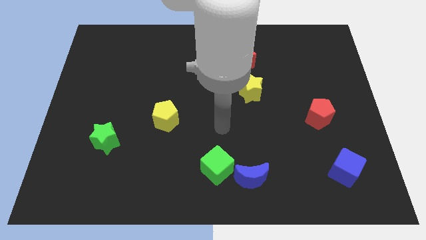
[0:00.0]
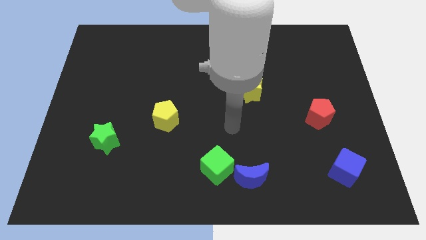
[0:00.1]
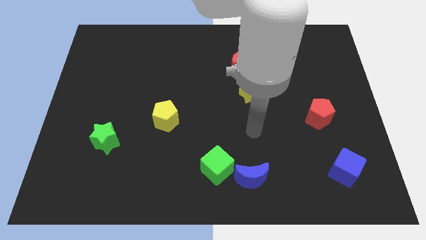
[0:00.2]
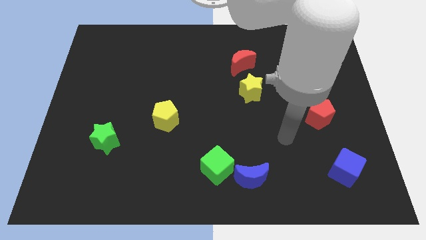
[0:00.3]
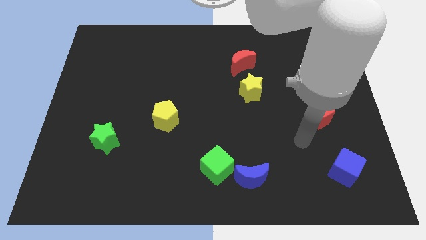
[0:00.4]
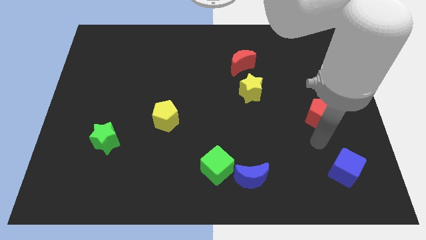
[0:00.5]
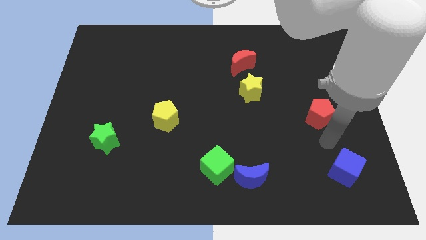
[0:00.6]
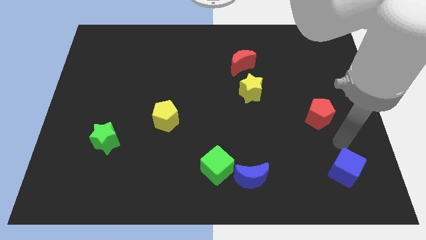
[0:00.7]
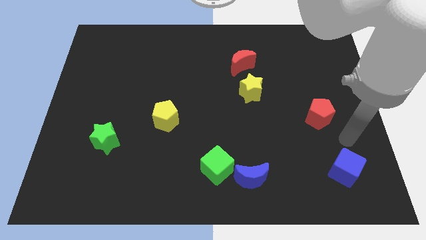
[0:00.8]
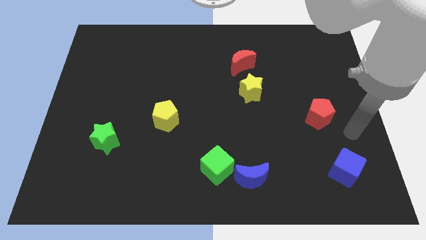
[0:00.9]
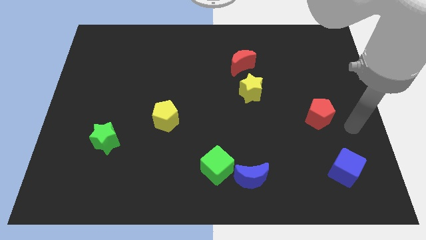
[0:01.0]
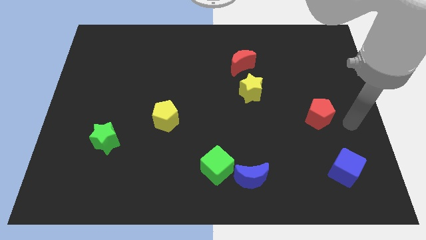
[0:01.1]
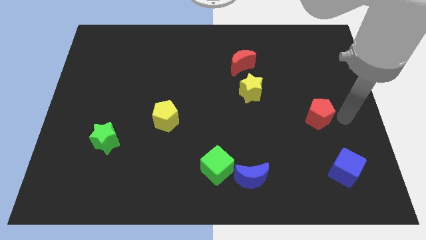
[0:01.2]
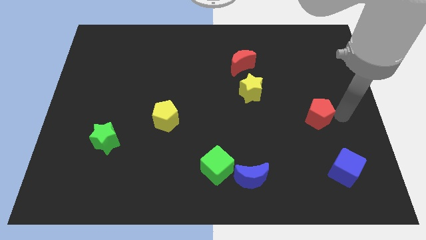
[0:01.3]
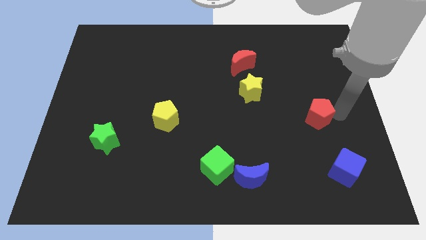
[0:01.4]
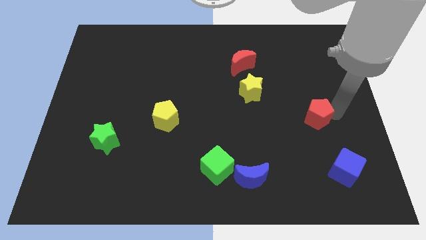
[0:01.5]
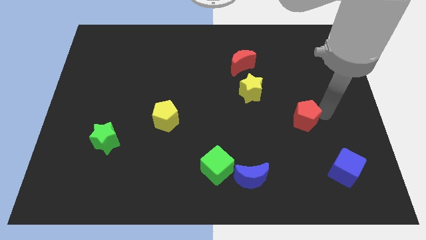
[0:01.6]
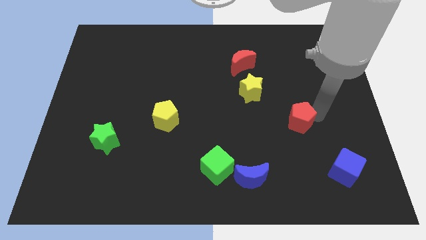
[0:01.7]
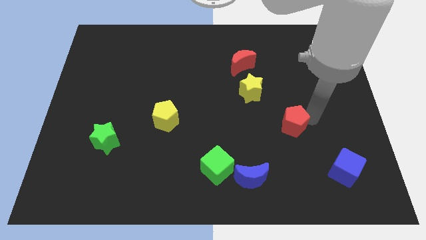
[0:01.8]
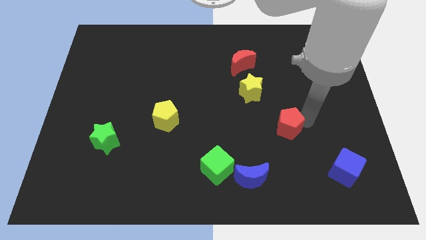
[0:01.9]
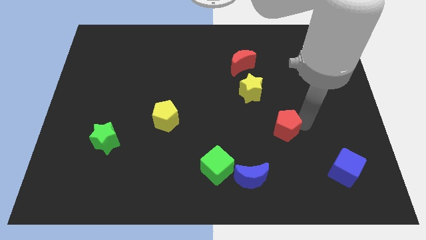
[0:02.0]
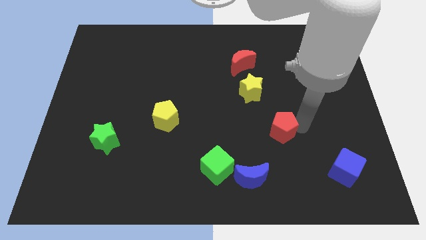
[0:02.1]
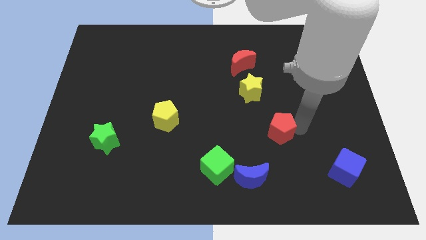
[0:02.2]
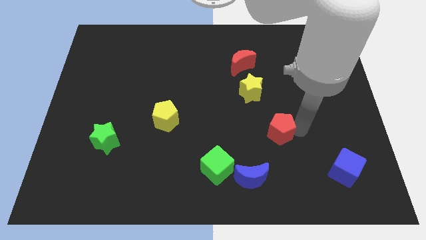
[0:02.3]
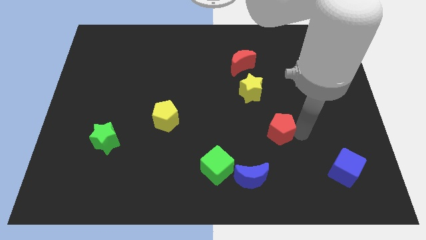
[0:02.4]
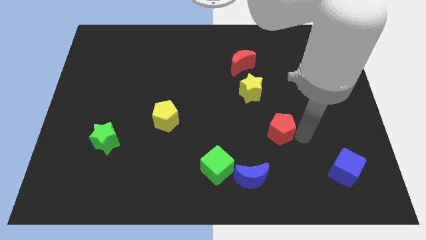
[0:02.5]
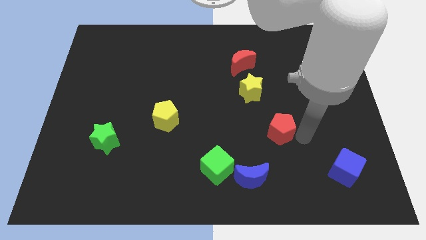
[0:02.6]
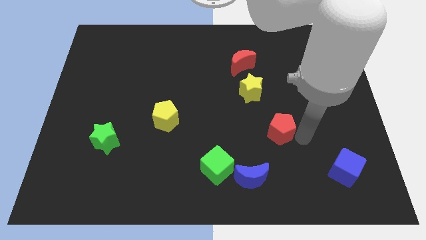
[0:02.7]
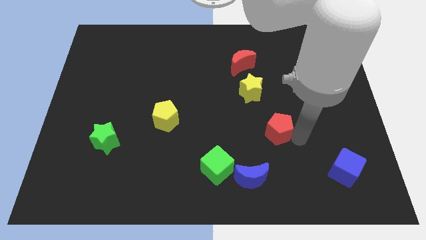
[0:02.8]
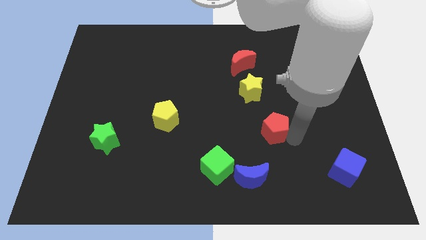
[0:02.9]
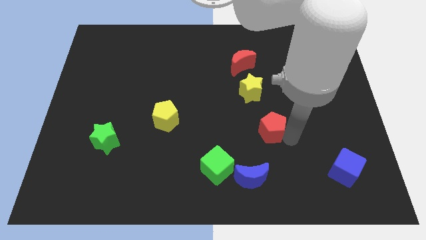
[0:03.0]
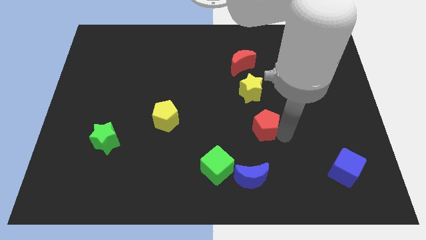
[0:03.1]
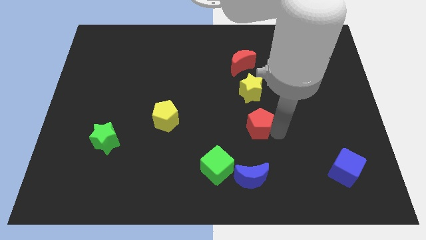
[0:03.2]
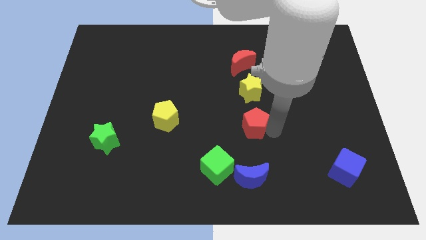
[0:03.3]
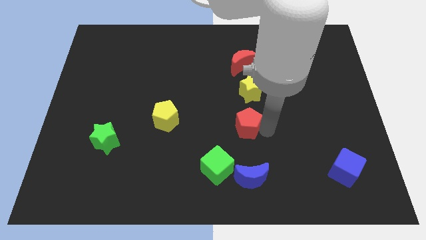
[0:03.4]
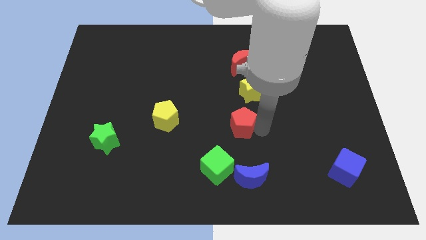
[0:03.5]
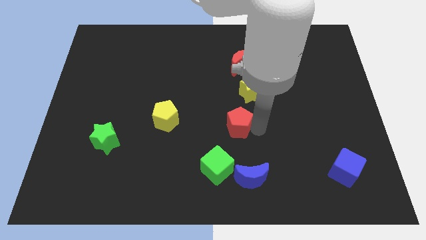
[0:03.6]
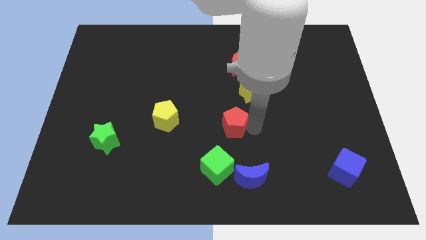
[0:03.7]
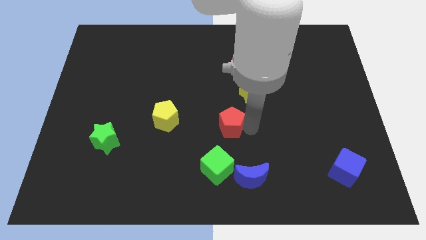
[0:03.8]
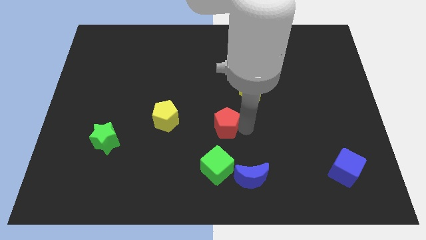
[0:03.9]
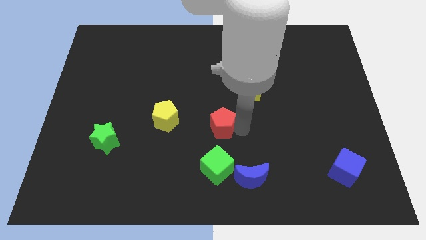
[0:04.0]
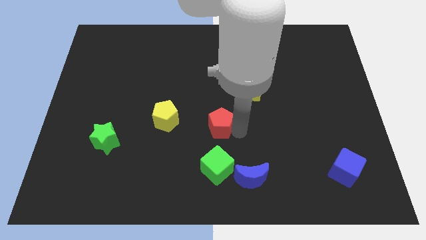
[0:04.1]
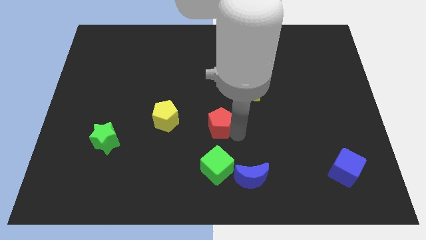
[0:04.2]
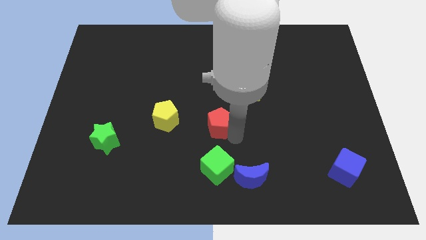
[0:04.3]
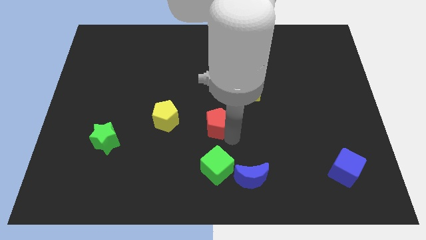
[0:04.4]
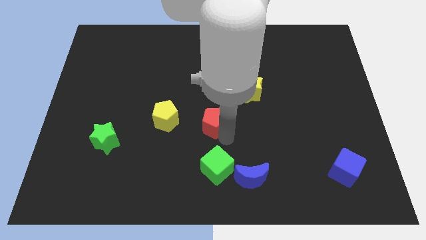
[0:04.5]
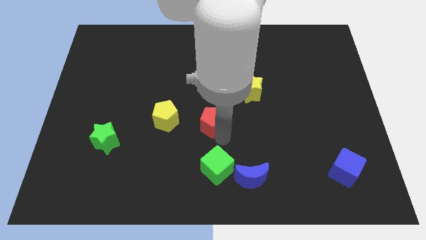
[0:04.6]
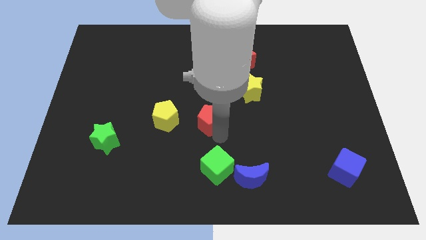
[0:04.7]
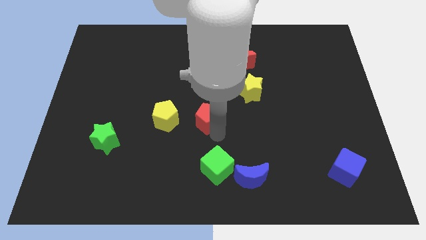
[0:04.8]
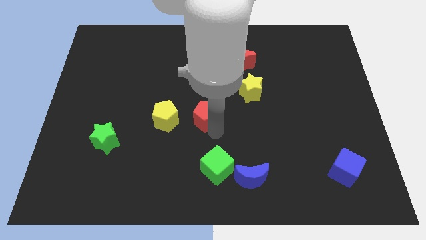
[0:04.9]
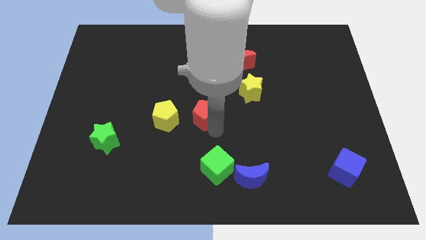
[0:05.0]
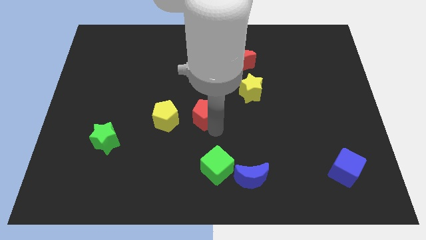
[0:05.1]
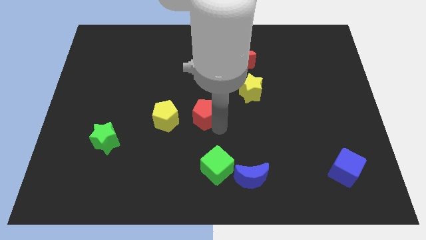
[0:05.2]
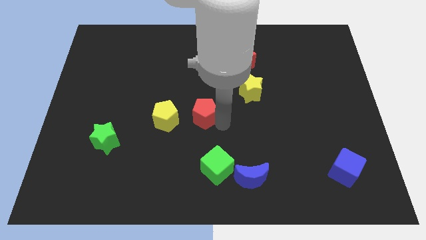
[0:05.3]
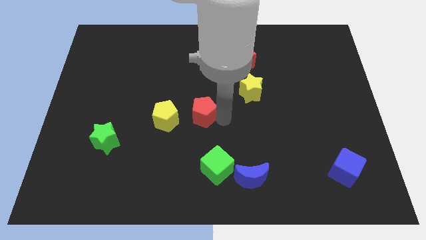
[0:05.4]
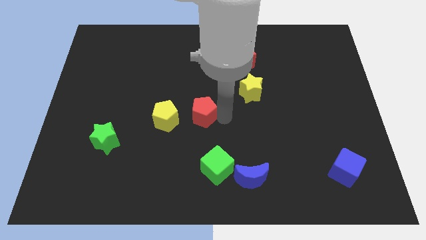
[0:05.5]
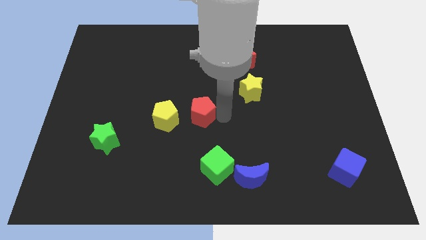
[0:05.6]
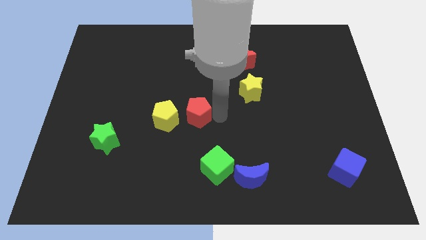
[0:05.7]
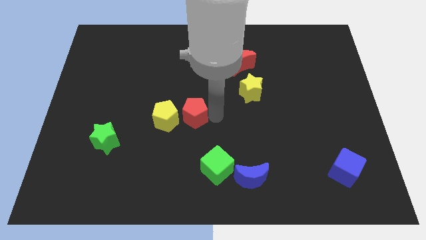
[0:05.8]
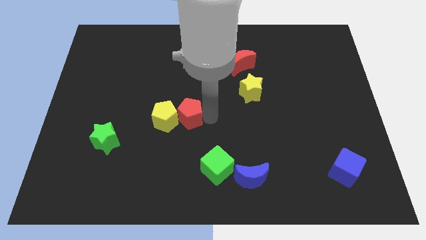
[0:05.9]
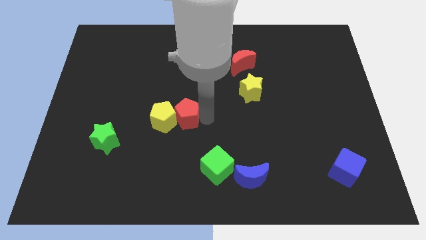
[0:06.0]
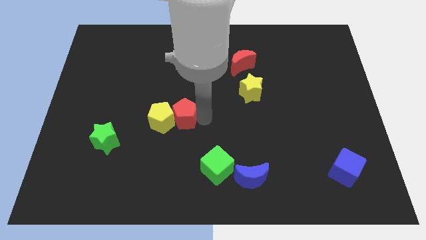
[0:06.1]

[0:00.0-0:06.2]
put the red pentagon to the yellow pentagon

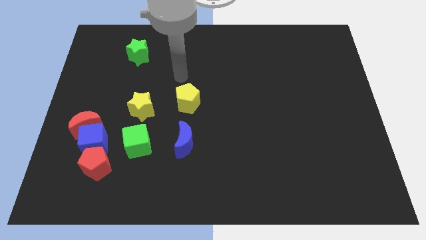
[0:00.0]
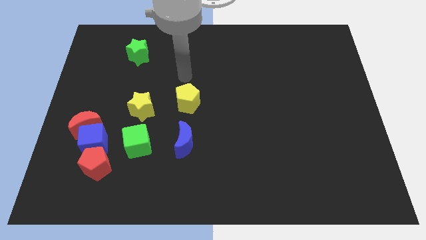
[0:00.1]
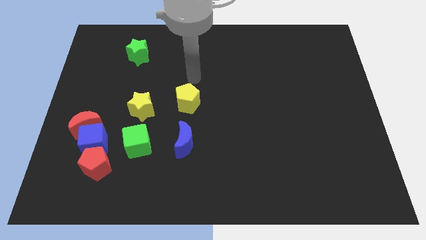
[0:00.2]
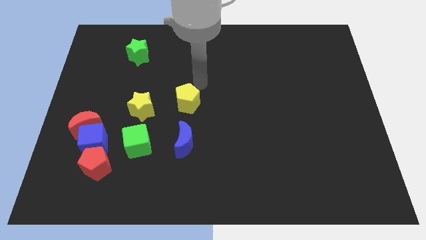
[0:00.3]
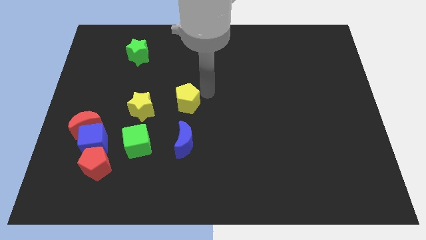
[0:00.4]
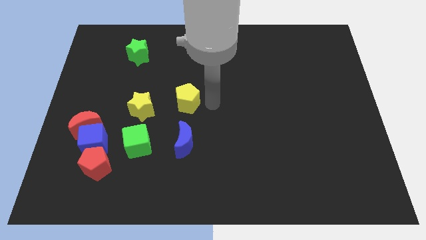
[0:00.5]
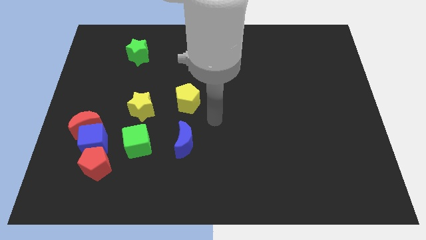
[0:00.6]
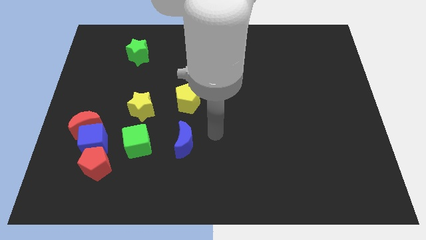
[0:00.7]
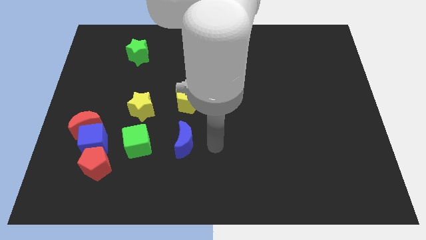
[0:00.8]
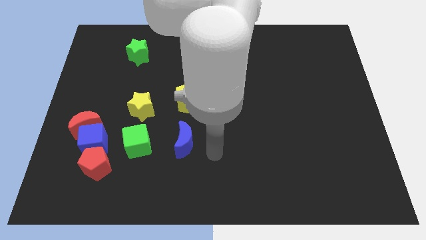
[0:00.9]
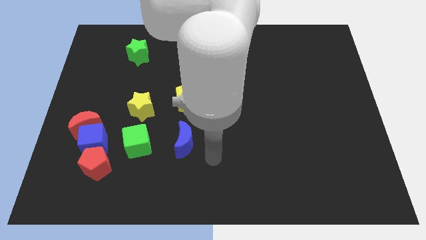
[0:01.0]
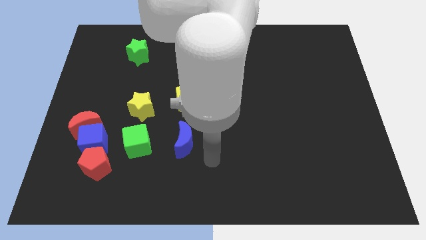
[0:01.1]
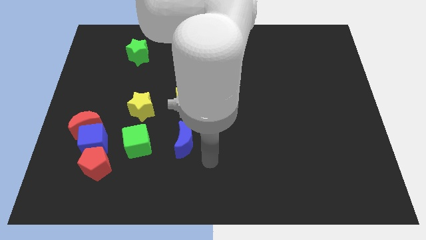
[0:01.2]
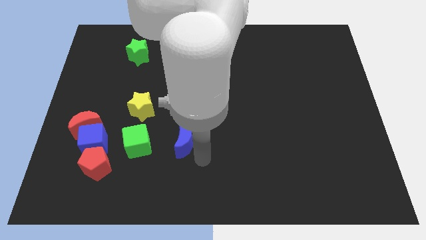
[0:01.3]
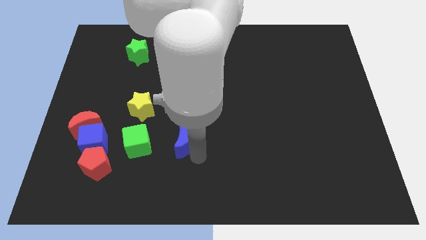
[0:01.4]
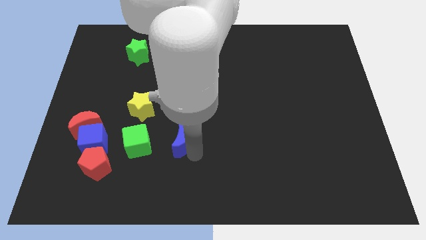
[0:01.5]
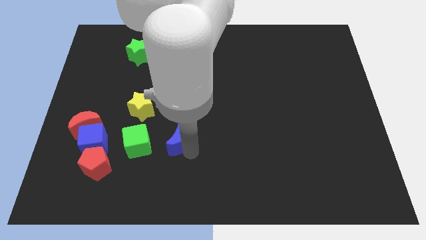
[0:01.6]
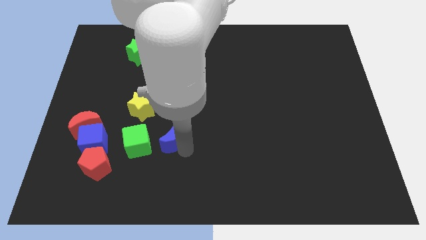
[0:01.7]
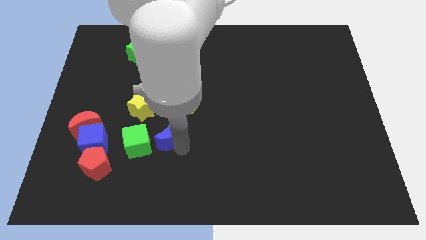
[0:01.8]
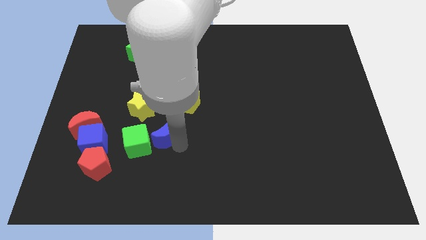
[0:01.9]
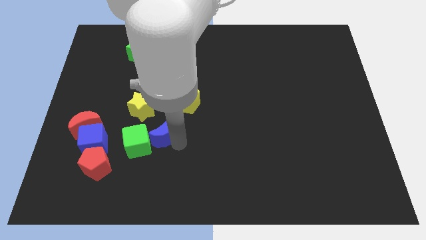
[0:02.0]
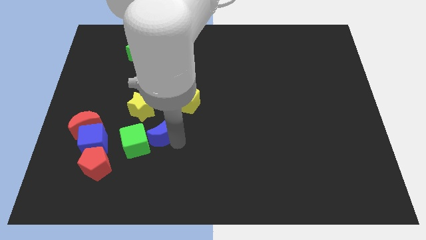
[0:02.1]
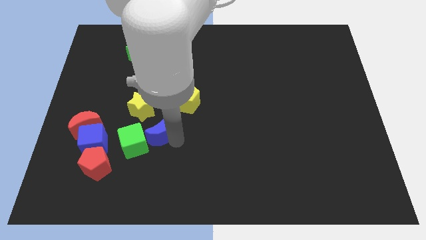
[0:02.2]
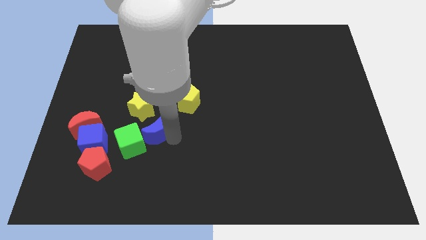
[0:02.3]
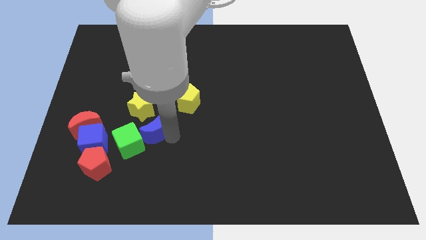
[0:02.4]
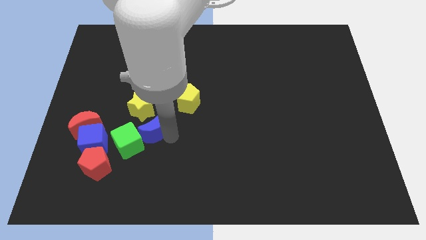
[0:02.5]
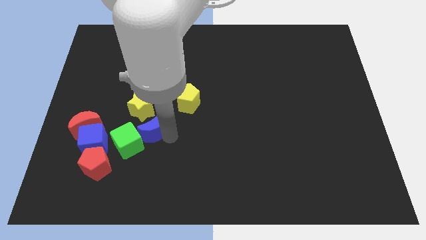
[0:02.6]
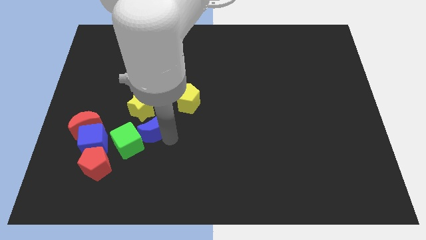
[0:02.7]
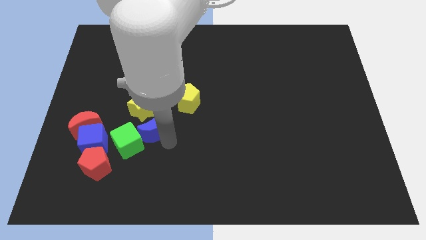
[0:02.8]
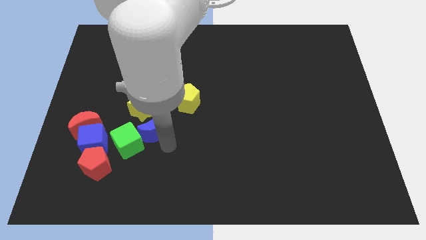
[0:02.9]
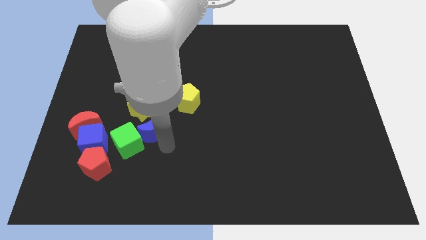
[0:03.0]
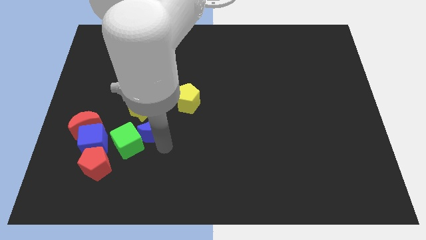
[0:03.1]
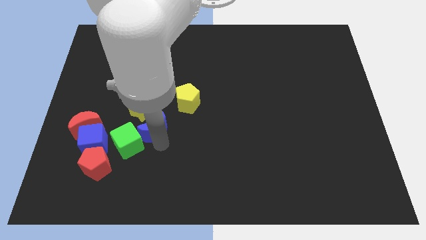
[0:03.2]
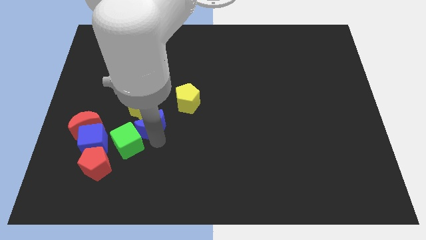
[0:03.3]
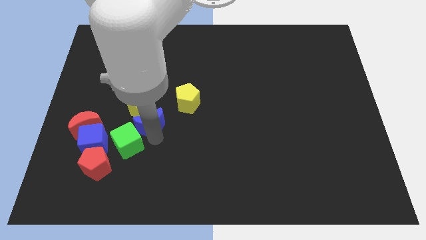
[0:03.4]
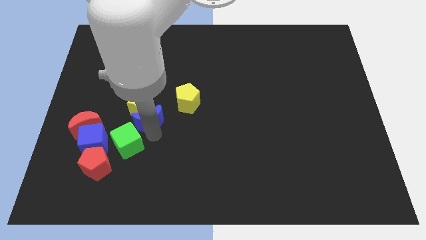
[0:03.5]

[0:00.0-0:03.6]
move the blue moon close to the yellow star
